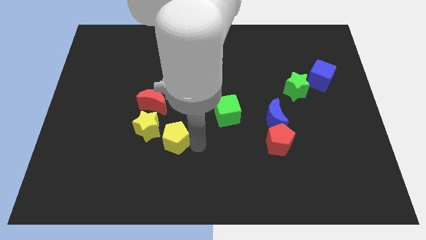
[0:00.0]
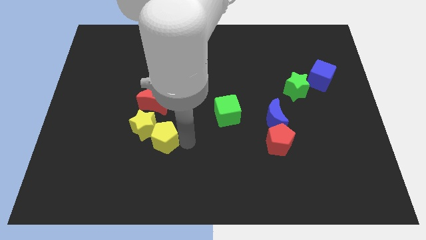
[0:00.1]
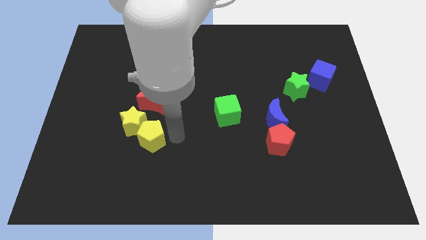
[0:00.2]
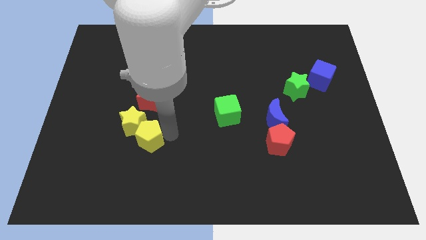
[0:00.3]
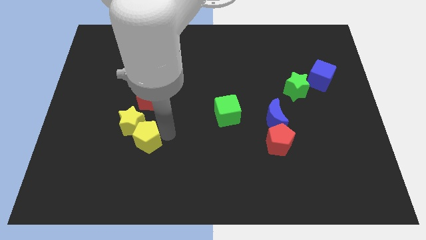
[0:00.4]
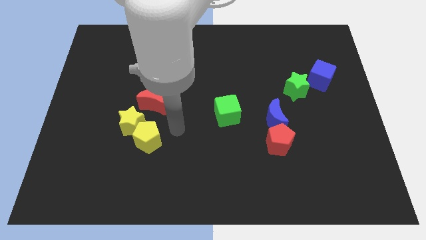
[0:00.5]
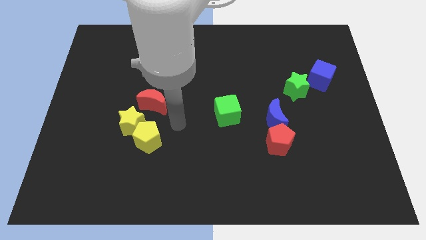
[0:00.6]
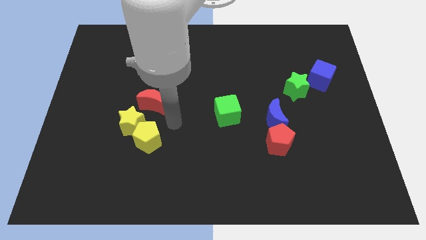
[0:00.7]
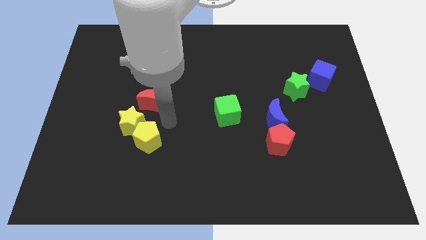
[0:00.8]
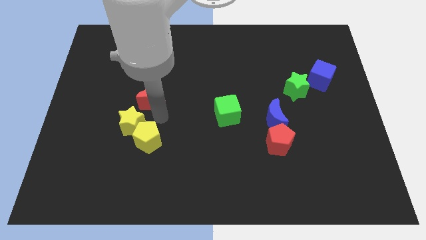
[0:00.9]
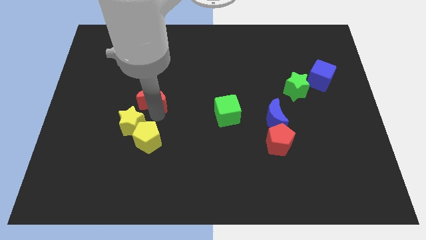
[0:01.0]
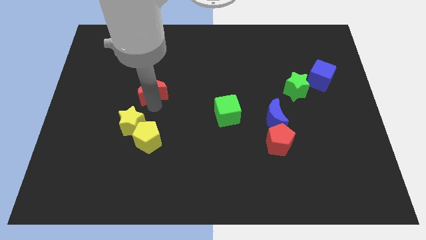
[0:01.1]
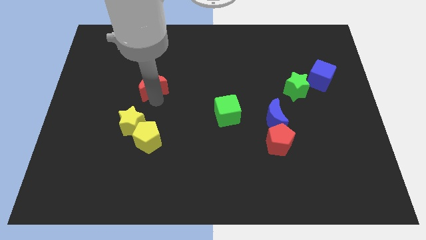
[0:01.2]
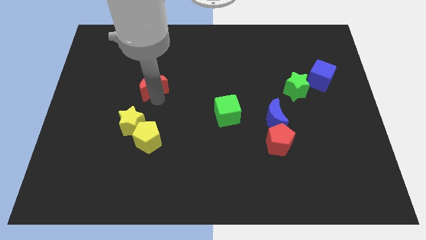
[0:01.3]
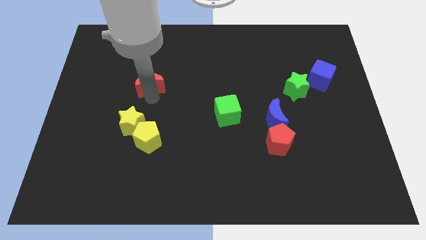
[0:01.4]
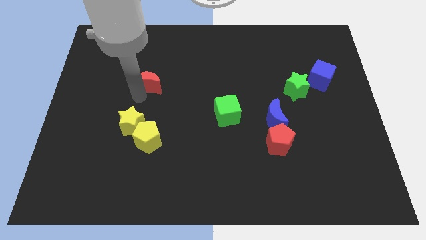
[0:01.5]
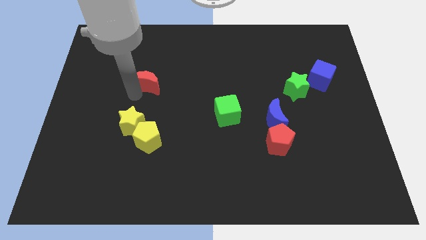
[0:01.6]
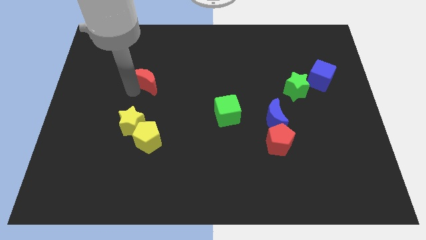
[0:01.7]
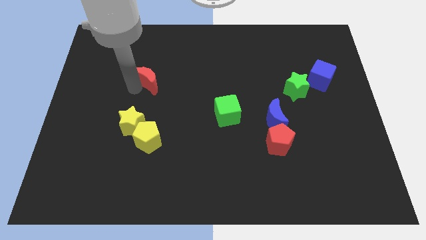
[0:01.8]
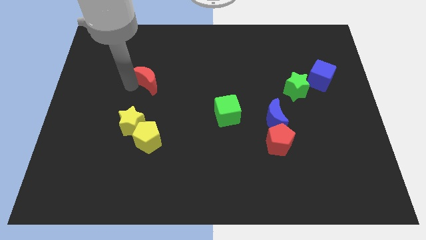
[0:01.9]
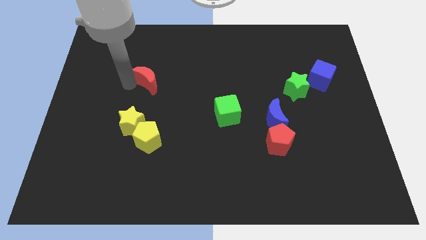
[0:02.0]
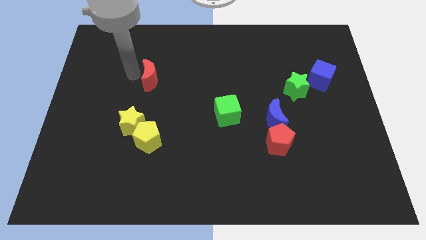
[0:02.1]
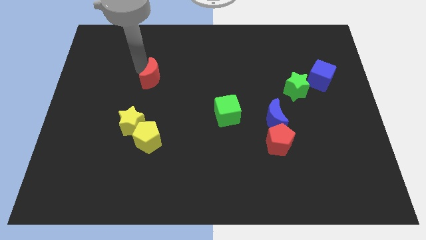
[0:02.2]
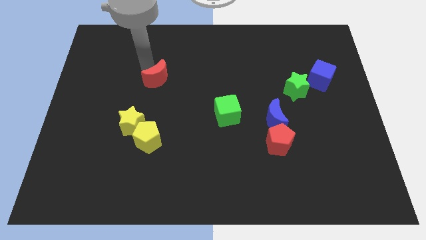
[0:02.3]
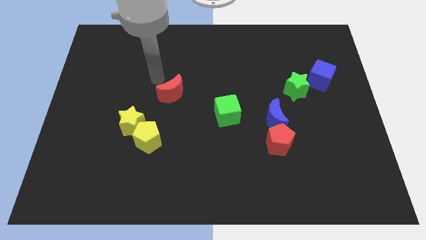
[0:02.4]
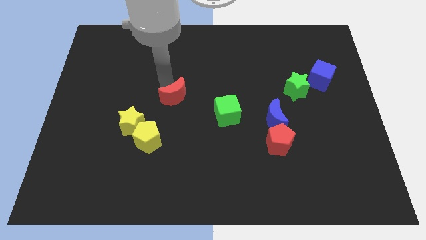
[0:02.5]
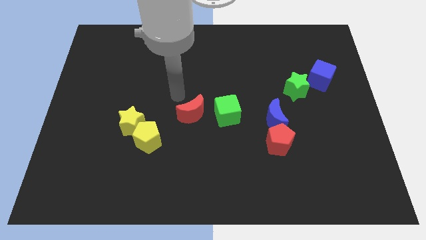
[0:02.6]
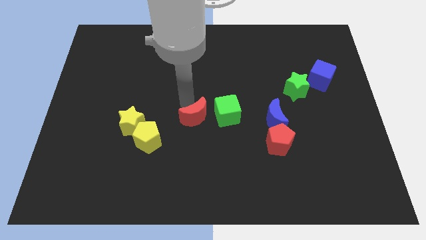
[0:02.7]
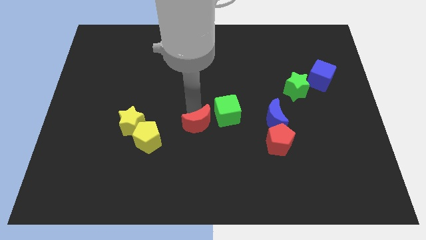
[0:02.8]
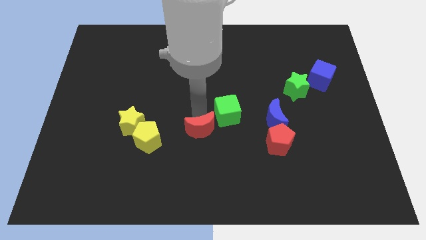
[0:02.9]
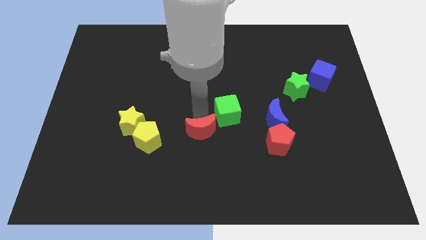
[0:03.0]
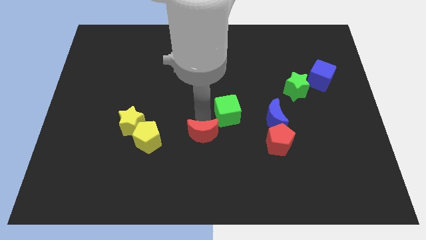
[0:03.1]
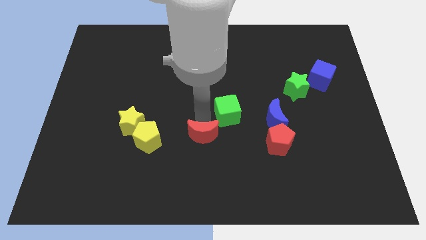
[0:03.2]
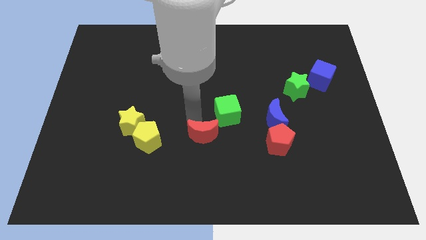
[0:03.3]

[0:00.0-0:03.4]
place the red crescent beside the green cube

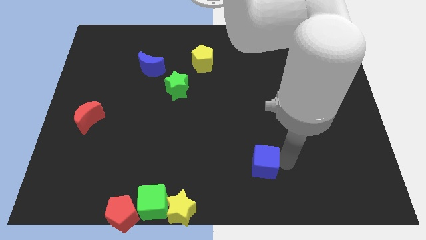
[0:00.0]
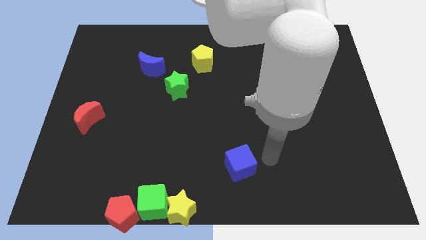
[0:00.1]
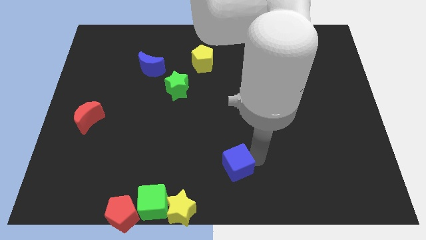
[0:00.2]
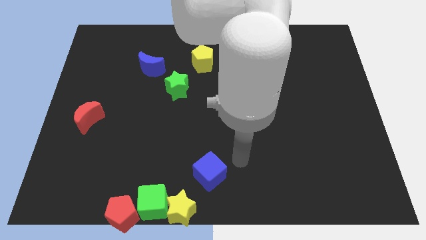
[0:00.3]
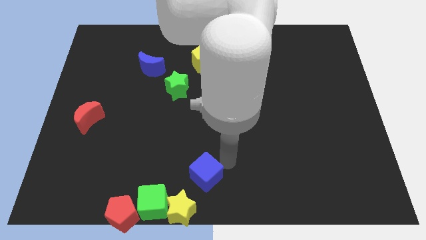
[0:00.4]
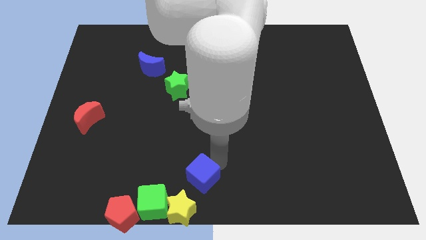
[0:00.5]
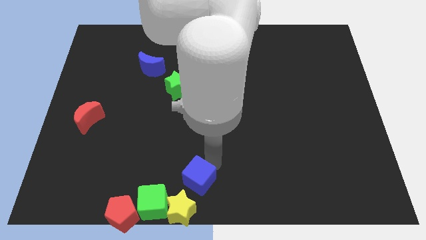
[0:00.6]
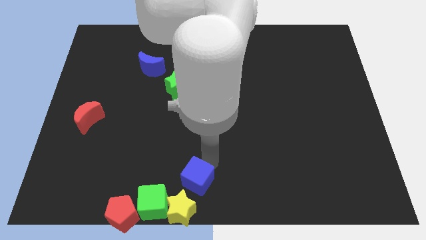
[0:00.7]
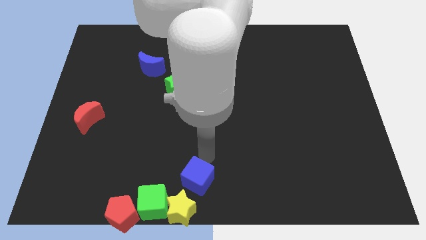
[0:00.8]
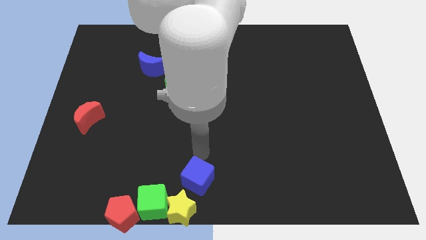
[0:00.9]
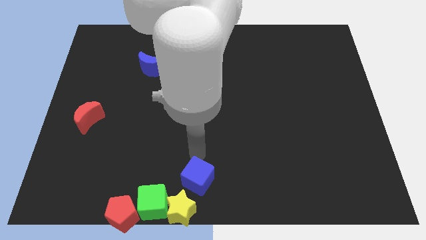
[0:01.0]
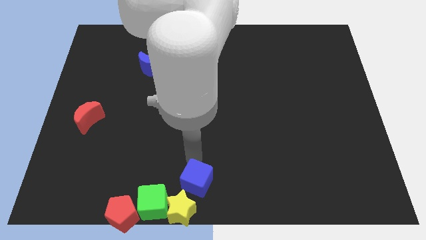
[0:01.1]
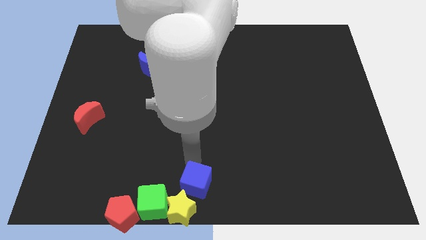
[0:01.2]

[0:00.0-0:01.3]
push the blue cube to the top of the yellow star

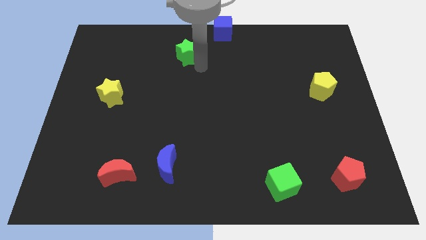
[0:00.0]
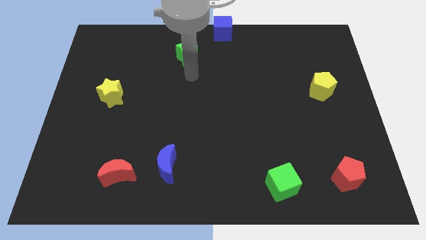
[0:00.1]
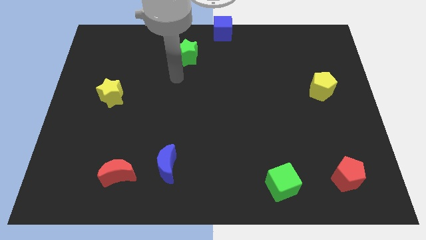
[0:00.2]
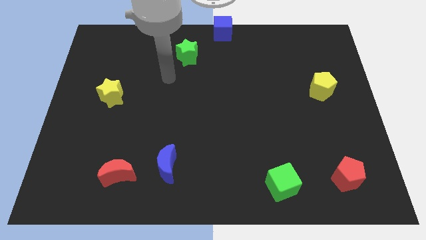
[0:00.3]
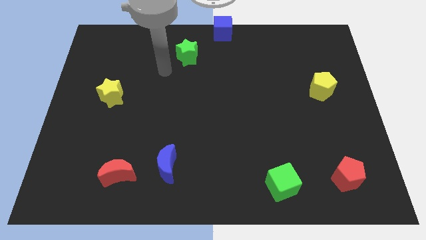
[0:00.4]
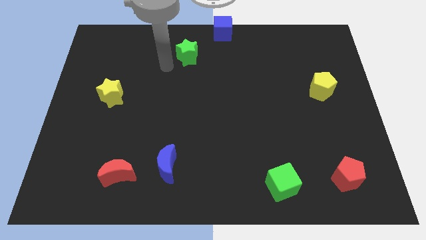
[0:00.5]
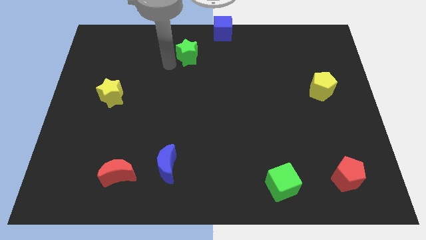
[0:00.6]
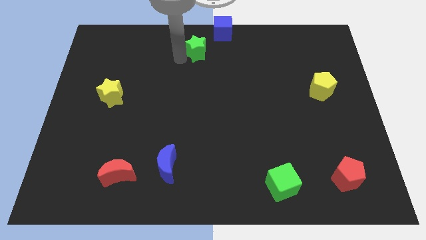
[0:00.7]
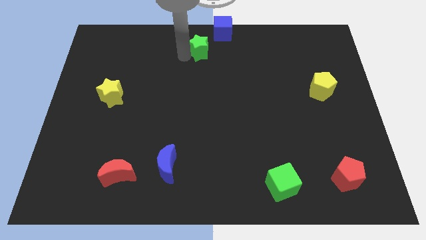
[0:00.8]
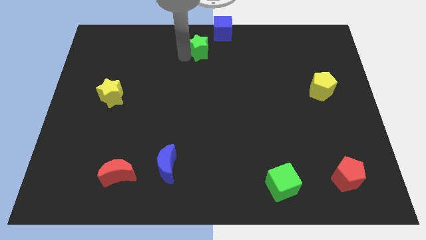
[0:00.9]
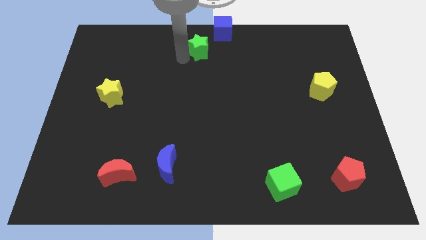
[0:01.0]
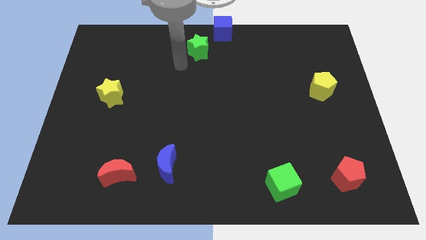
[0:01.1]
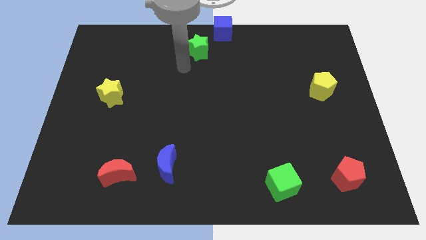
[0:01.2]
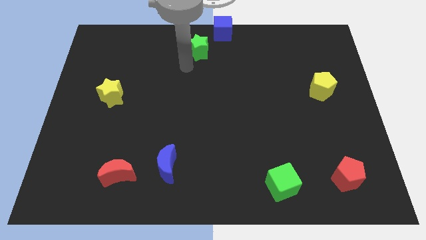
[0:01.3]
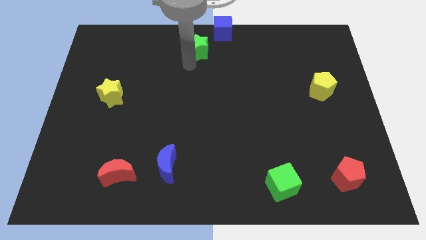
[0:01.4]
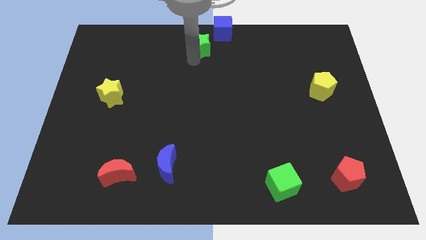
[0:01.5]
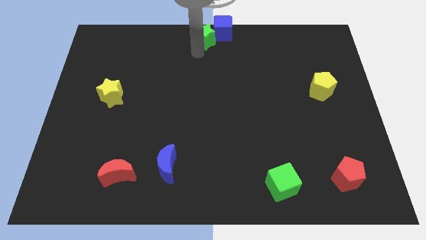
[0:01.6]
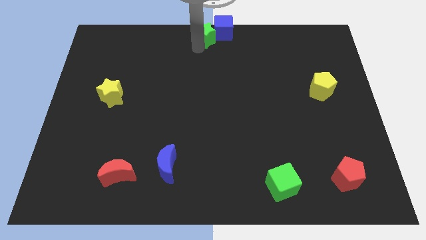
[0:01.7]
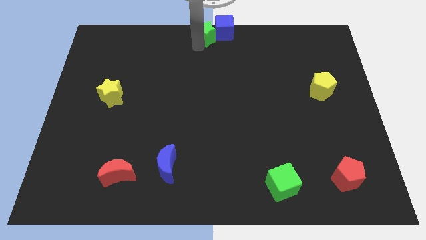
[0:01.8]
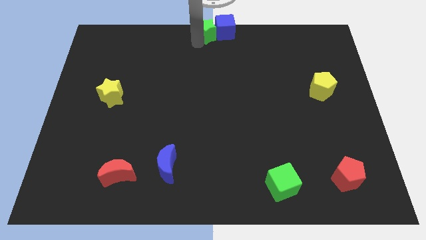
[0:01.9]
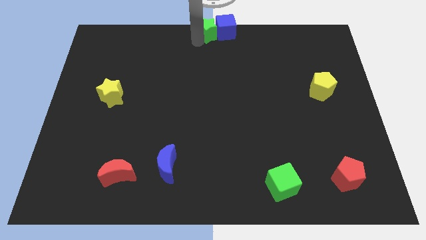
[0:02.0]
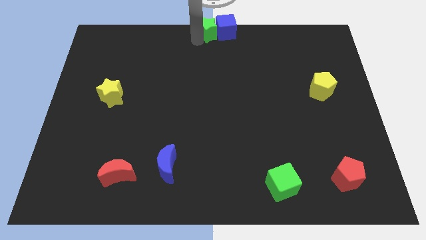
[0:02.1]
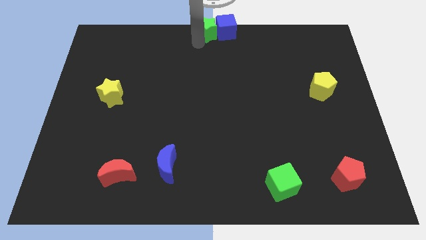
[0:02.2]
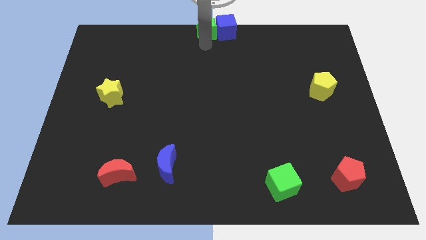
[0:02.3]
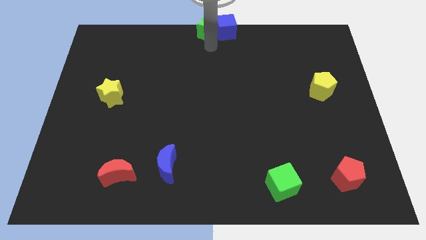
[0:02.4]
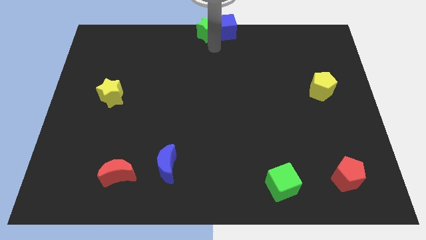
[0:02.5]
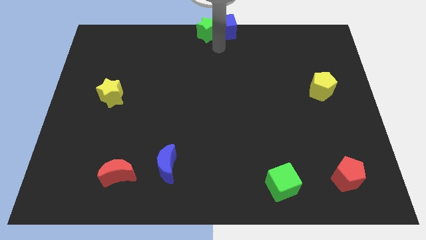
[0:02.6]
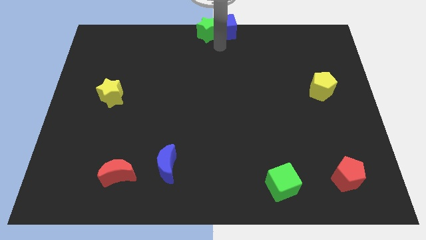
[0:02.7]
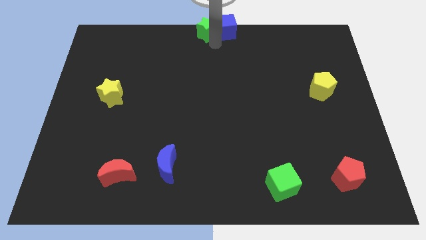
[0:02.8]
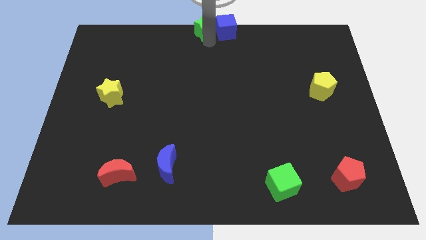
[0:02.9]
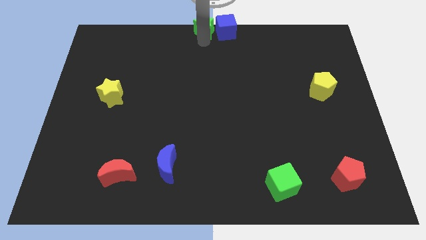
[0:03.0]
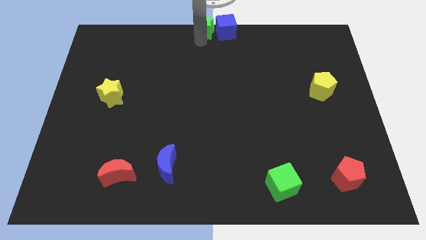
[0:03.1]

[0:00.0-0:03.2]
place green star at center top

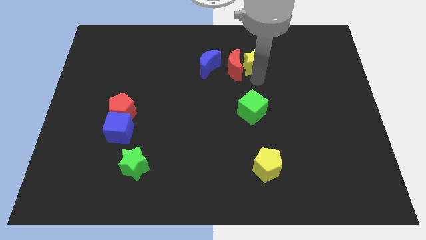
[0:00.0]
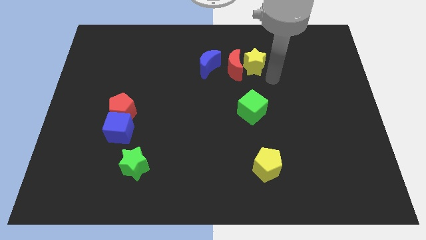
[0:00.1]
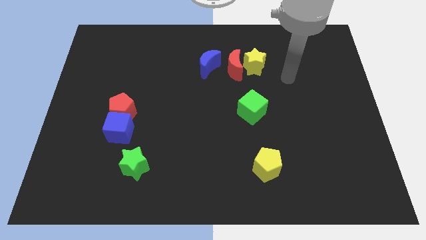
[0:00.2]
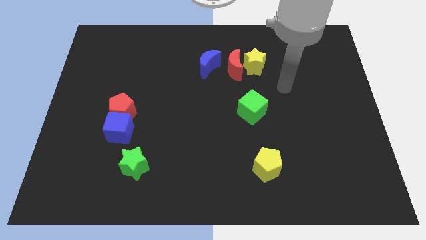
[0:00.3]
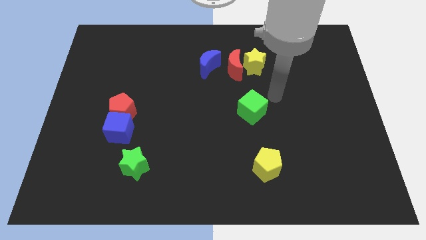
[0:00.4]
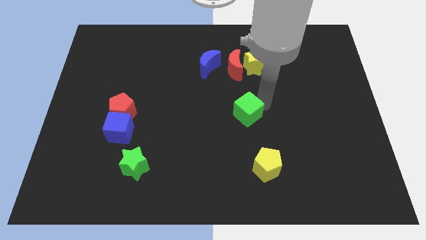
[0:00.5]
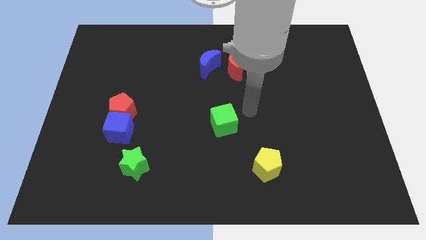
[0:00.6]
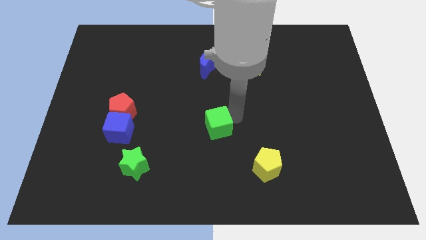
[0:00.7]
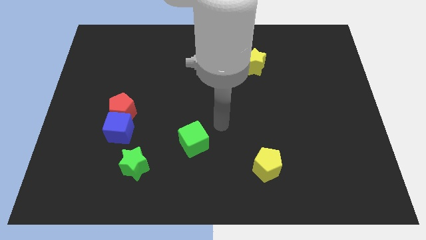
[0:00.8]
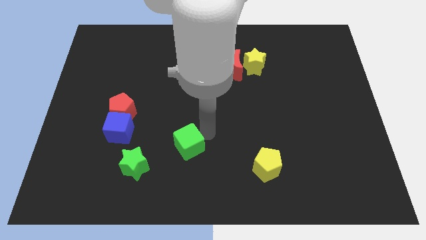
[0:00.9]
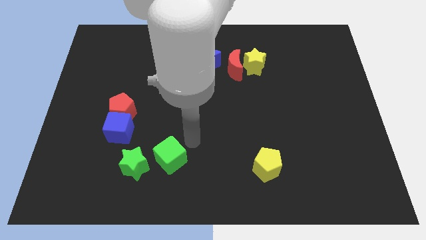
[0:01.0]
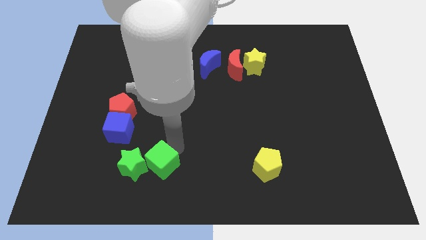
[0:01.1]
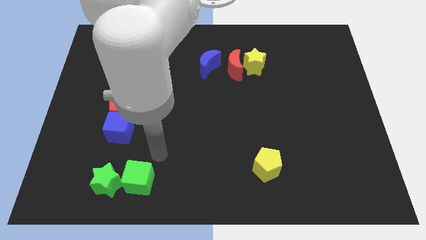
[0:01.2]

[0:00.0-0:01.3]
push the green cube into the green star
